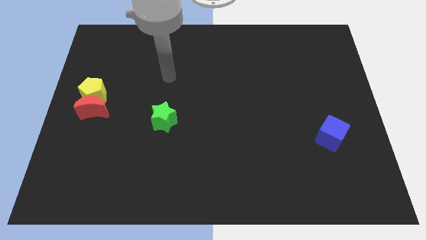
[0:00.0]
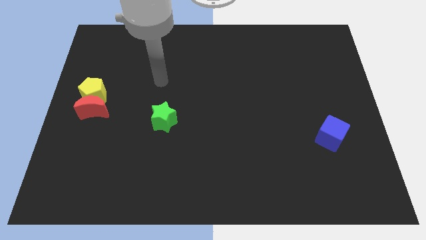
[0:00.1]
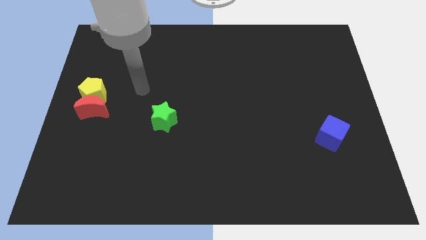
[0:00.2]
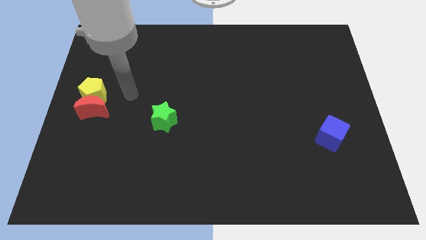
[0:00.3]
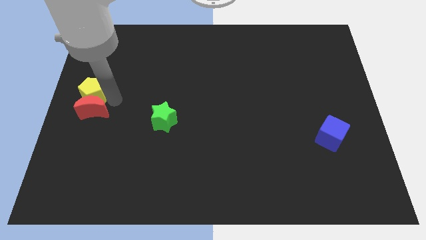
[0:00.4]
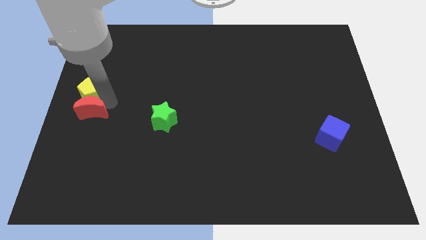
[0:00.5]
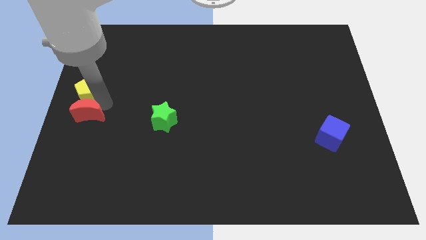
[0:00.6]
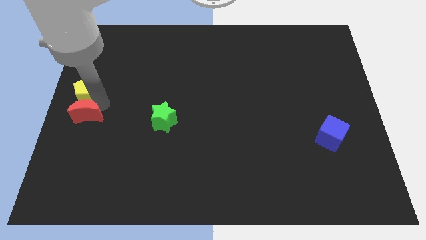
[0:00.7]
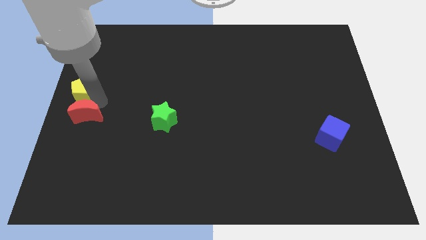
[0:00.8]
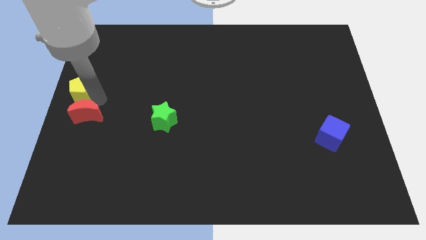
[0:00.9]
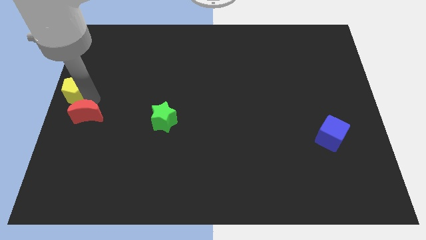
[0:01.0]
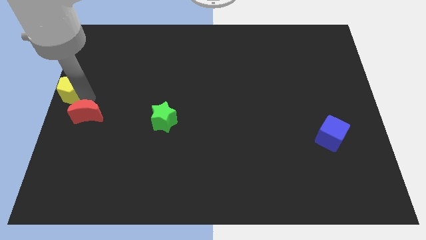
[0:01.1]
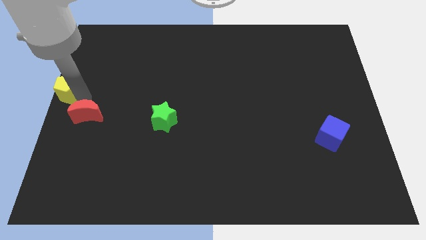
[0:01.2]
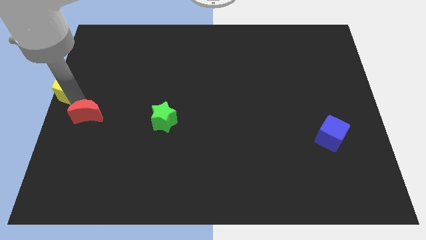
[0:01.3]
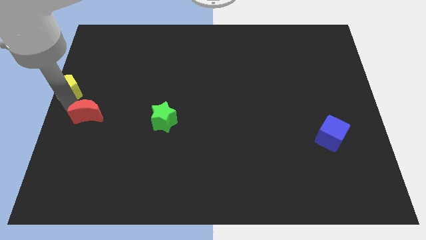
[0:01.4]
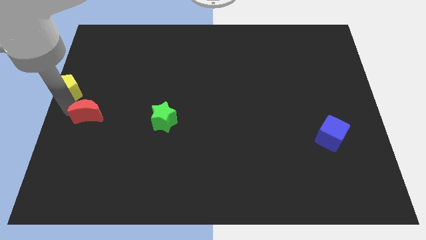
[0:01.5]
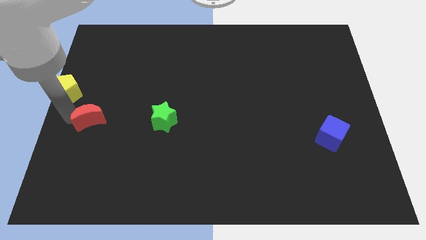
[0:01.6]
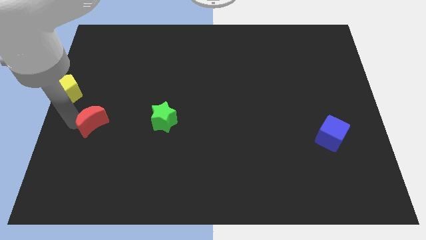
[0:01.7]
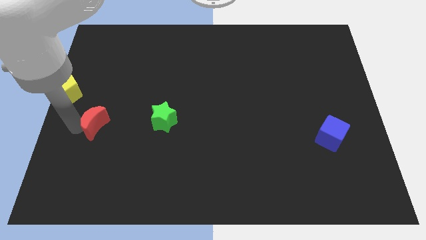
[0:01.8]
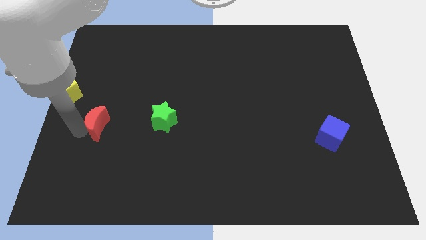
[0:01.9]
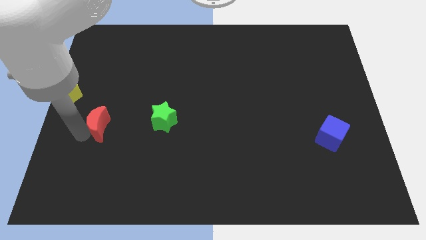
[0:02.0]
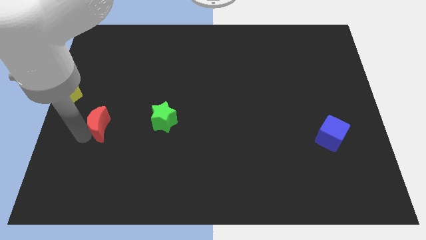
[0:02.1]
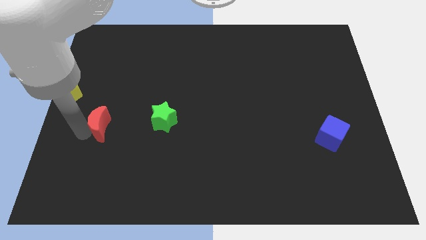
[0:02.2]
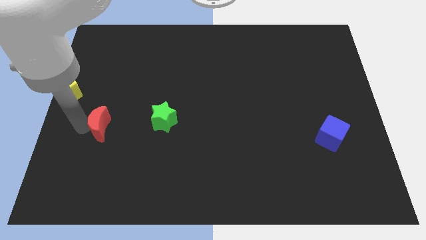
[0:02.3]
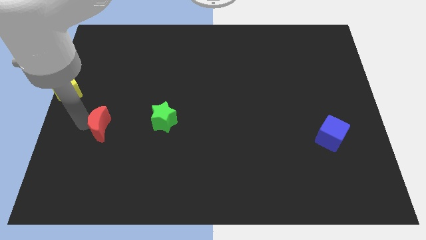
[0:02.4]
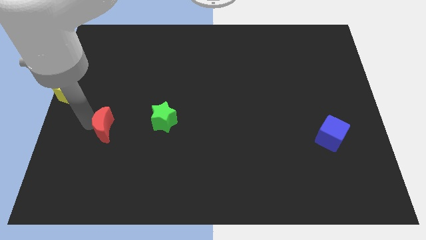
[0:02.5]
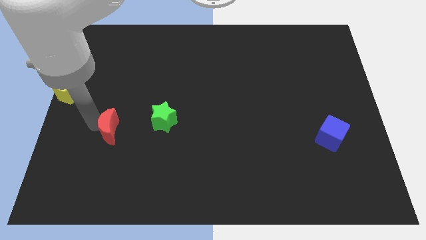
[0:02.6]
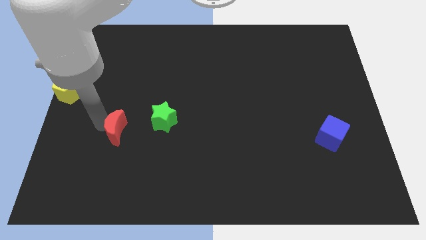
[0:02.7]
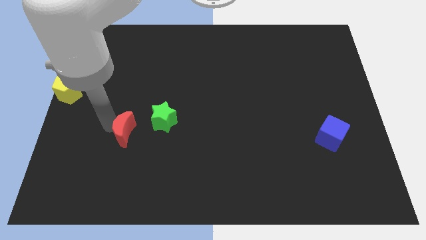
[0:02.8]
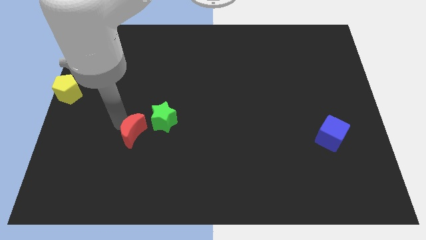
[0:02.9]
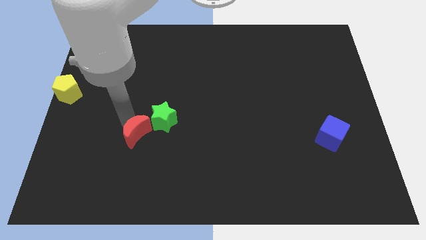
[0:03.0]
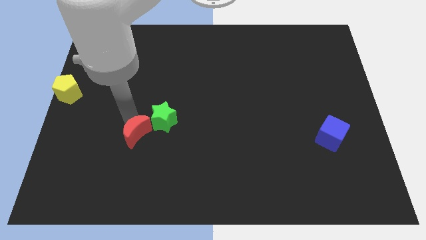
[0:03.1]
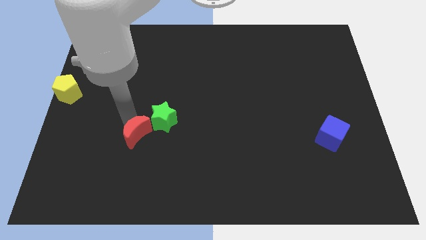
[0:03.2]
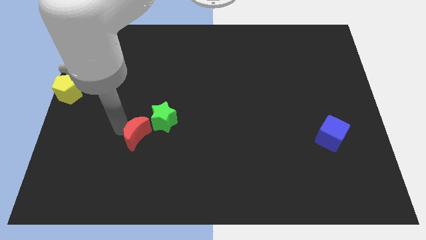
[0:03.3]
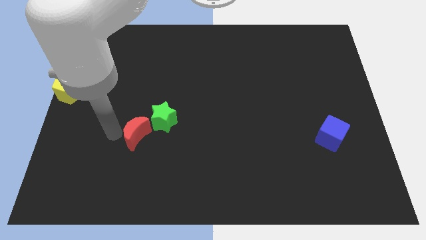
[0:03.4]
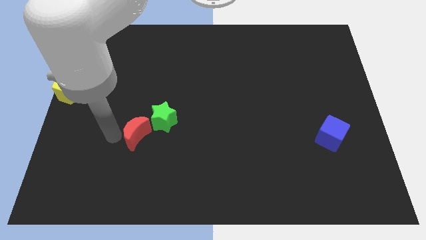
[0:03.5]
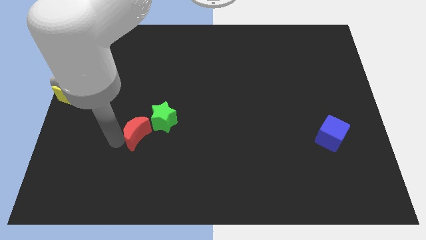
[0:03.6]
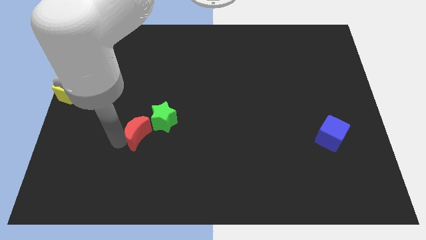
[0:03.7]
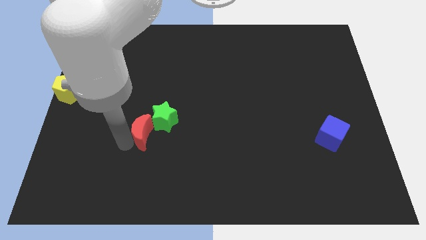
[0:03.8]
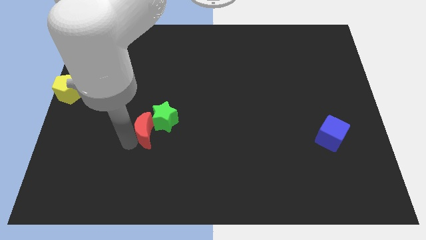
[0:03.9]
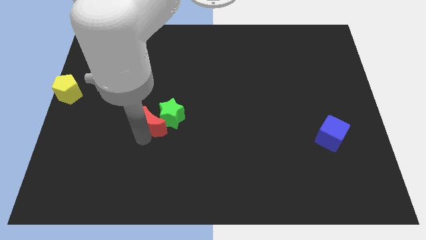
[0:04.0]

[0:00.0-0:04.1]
put the moon next to the green star

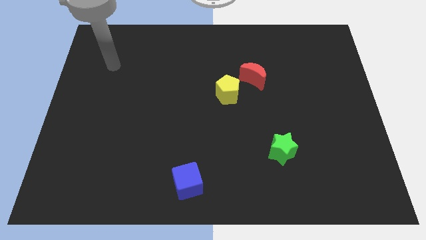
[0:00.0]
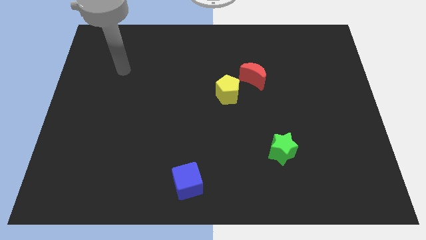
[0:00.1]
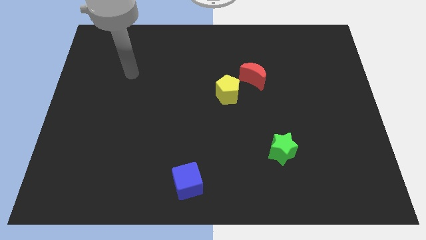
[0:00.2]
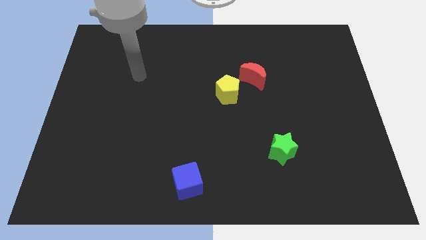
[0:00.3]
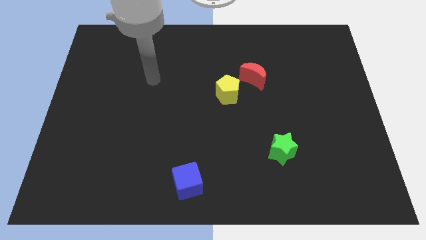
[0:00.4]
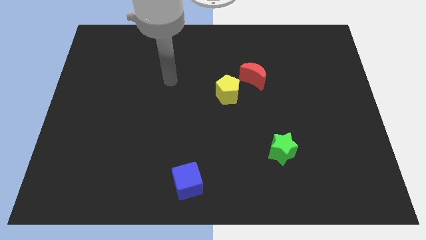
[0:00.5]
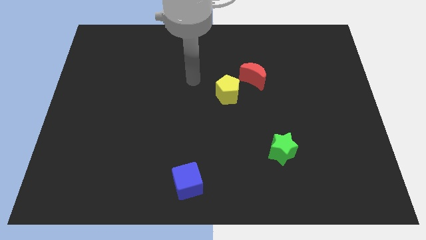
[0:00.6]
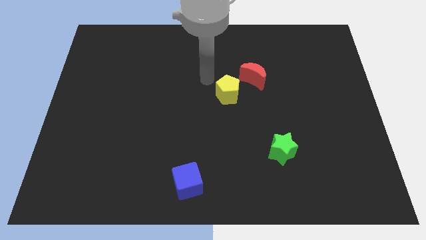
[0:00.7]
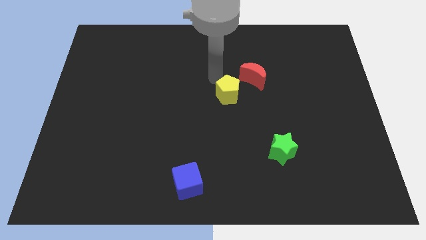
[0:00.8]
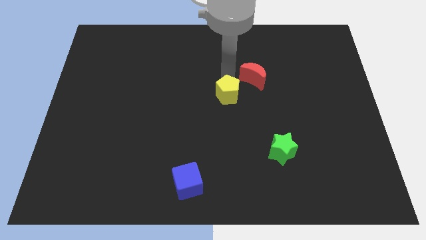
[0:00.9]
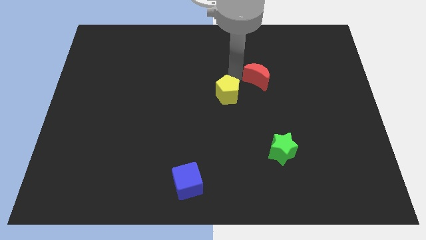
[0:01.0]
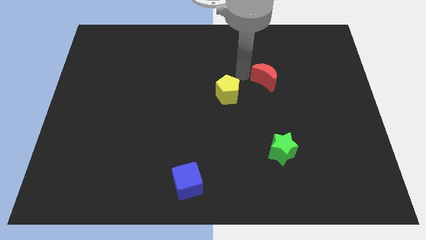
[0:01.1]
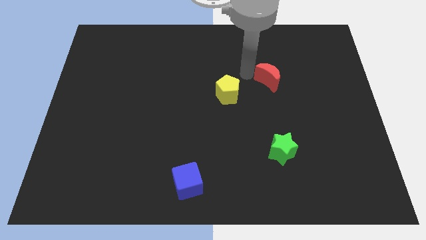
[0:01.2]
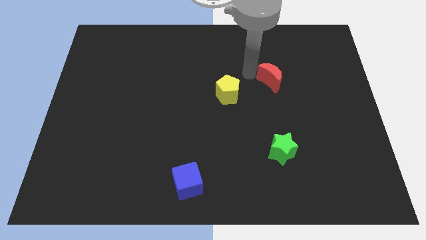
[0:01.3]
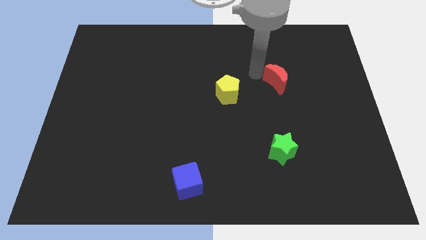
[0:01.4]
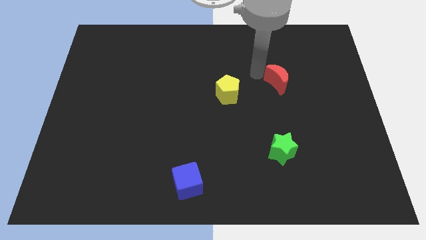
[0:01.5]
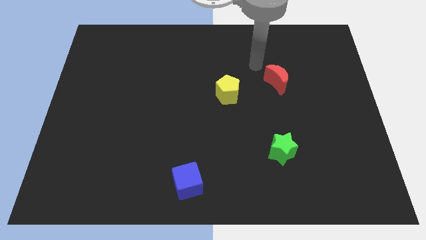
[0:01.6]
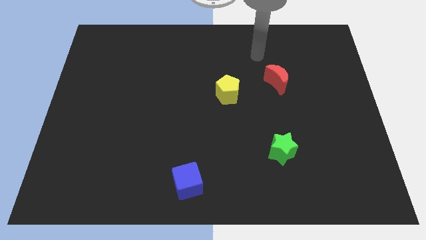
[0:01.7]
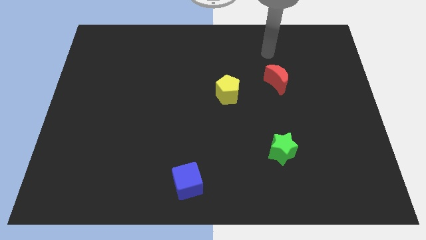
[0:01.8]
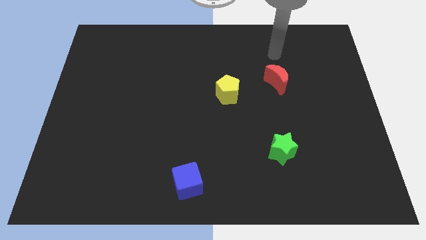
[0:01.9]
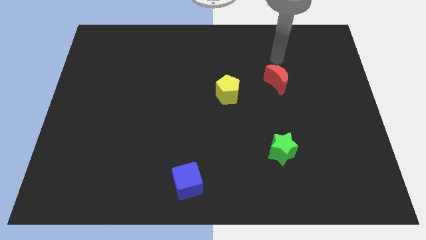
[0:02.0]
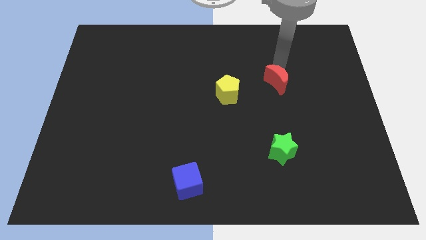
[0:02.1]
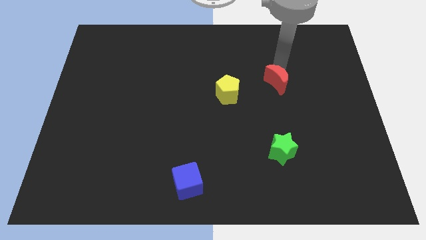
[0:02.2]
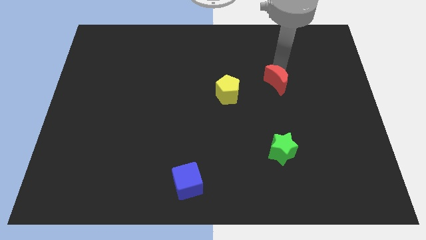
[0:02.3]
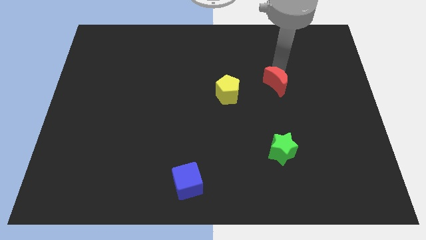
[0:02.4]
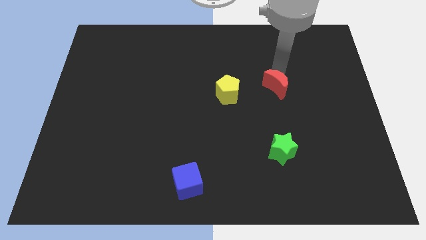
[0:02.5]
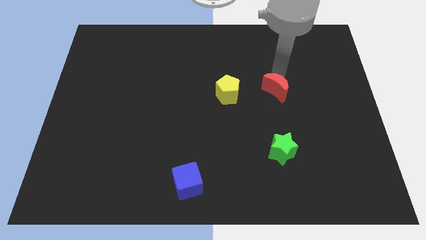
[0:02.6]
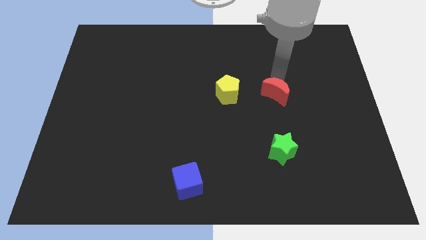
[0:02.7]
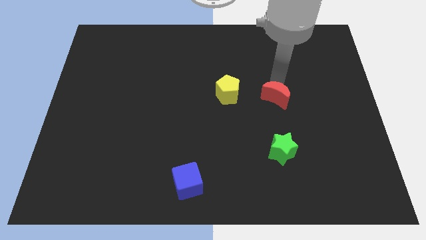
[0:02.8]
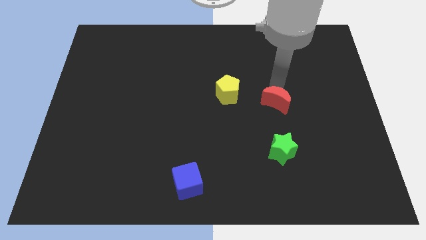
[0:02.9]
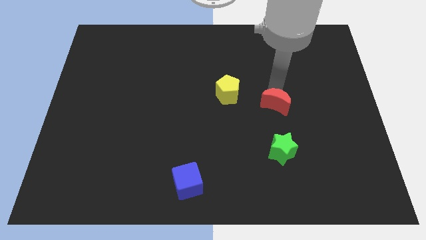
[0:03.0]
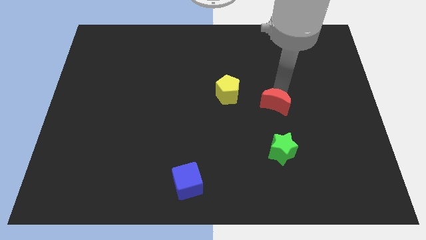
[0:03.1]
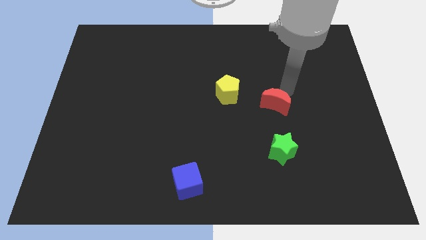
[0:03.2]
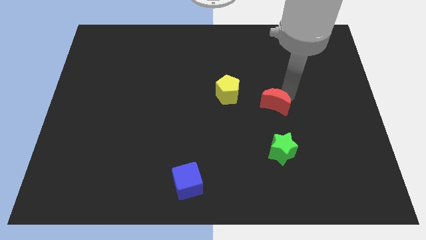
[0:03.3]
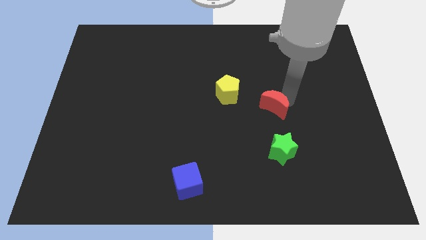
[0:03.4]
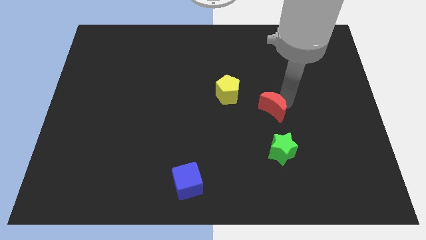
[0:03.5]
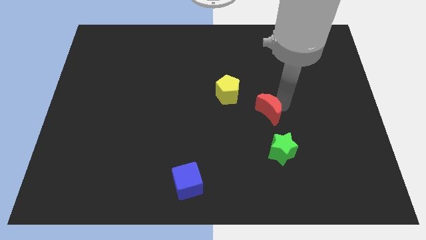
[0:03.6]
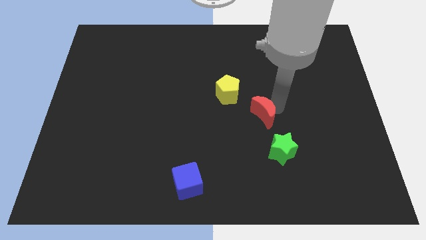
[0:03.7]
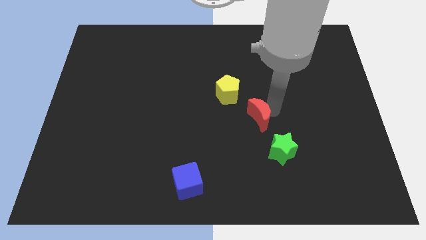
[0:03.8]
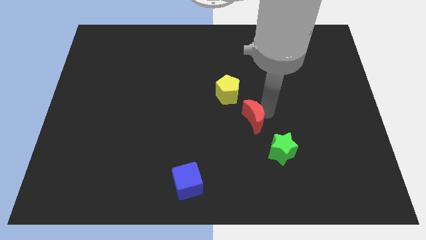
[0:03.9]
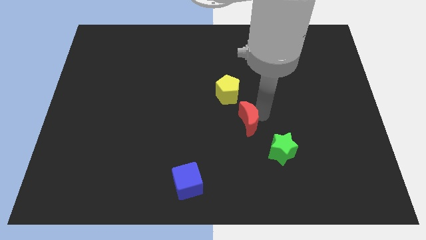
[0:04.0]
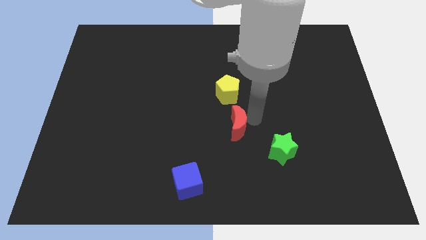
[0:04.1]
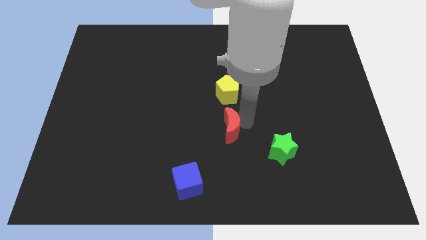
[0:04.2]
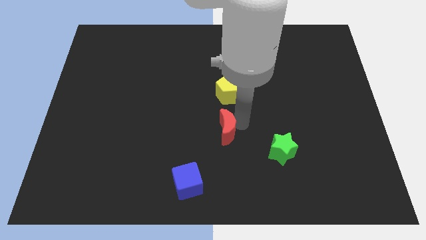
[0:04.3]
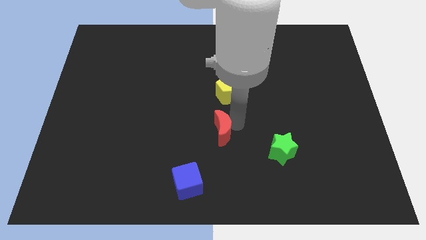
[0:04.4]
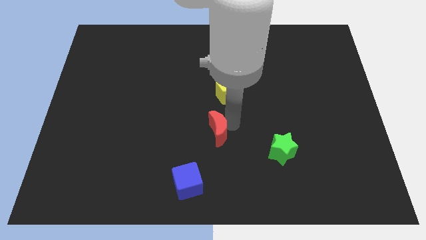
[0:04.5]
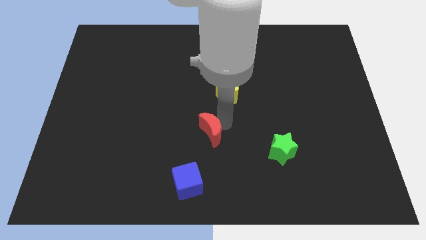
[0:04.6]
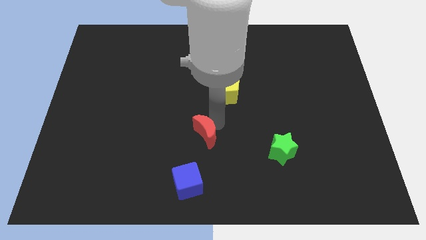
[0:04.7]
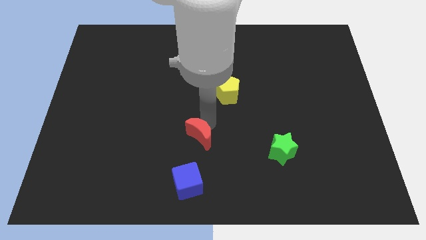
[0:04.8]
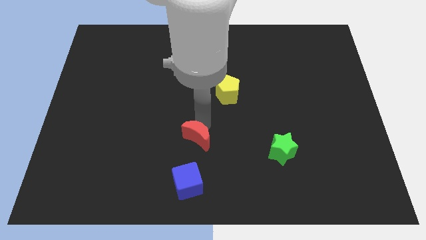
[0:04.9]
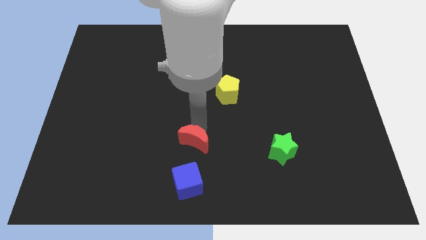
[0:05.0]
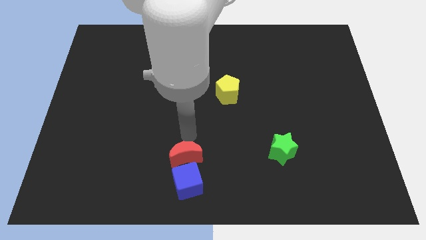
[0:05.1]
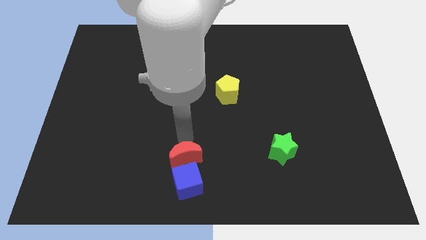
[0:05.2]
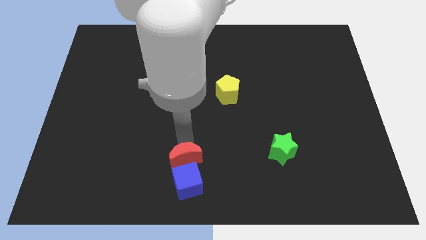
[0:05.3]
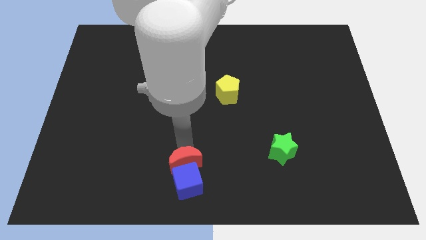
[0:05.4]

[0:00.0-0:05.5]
push the moon close to the blue block
